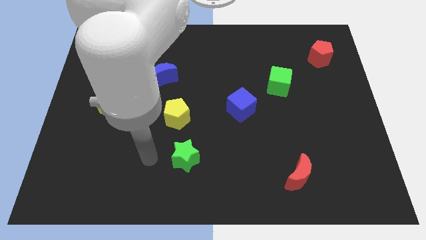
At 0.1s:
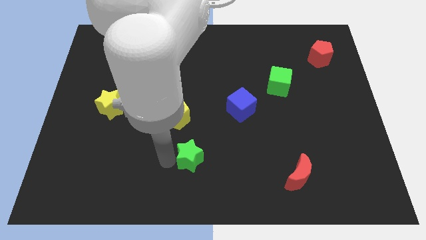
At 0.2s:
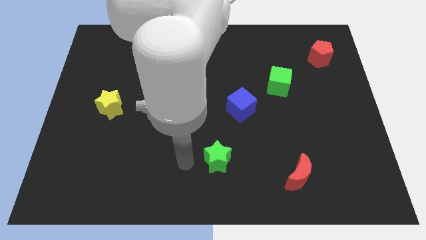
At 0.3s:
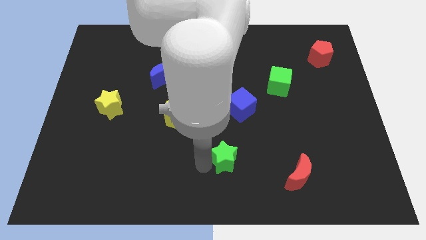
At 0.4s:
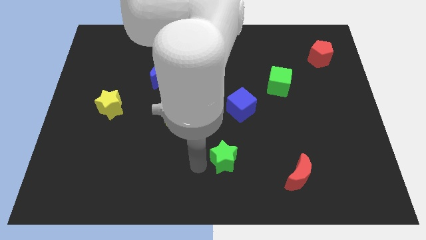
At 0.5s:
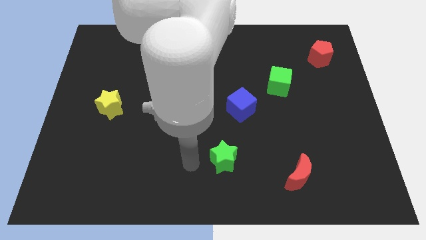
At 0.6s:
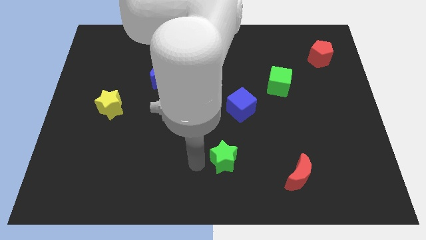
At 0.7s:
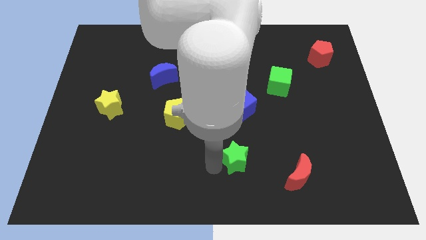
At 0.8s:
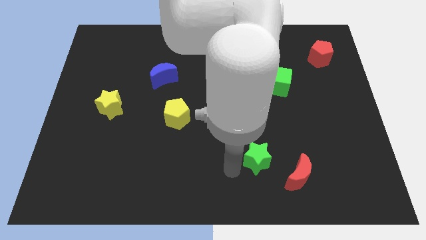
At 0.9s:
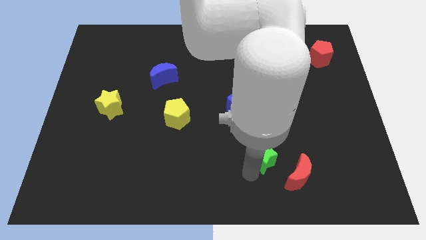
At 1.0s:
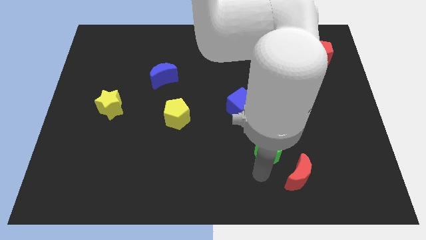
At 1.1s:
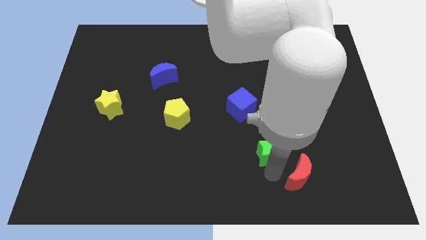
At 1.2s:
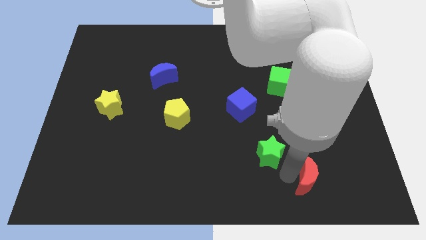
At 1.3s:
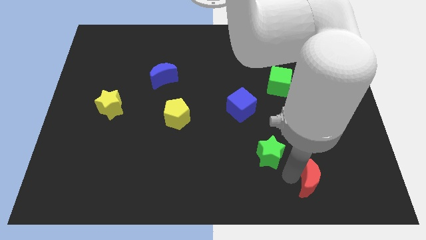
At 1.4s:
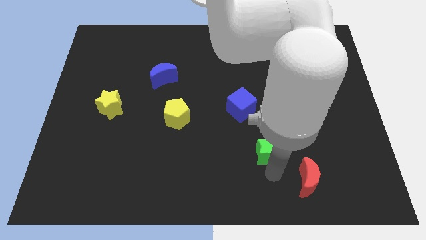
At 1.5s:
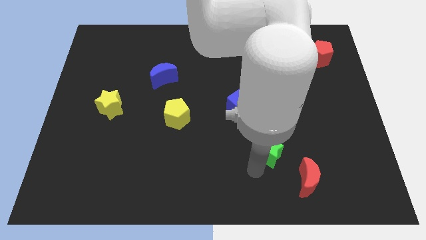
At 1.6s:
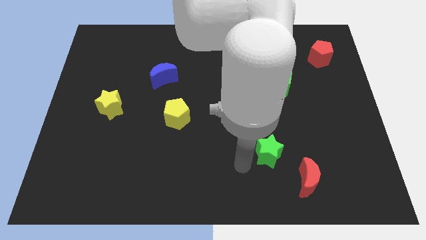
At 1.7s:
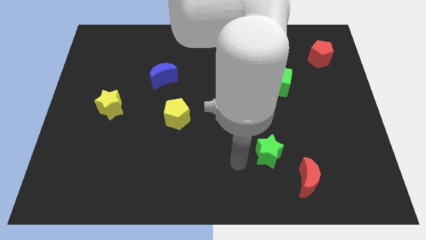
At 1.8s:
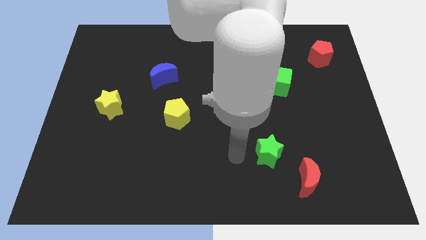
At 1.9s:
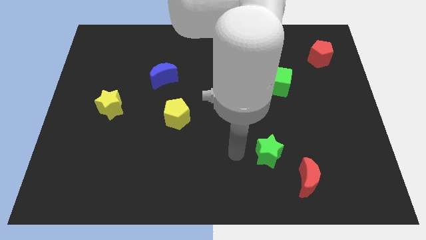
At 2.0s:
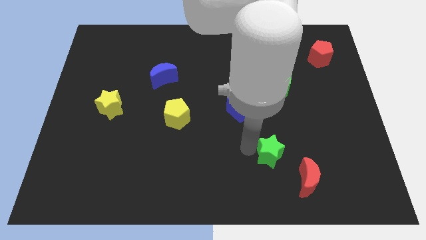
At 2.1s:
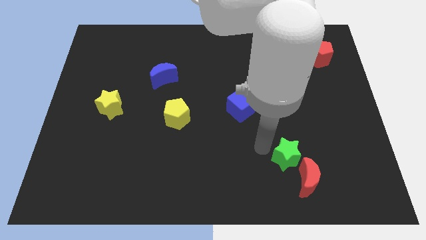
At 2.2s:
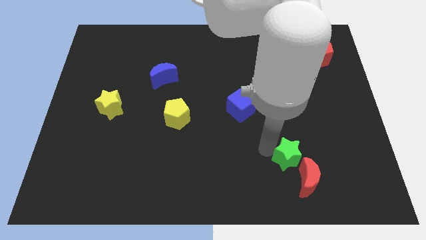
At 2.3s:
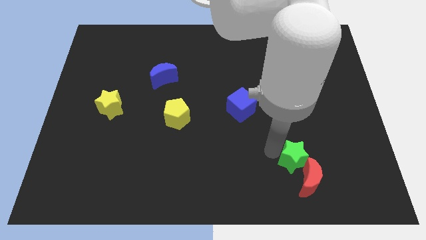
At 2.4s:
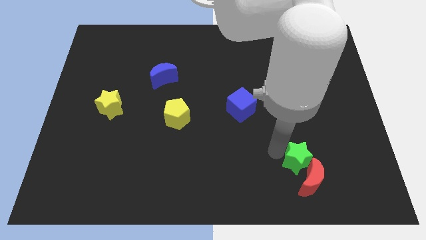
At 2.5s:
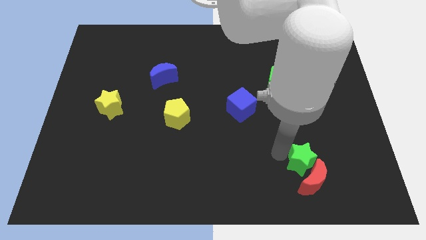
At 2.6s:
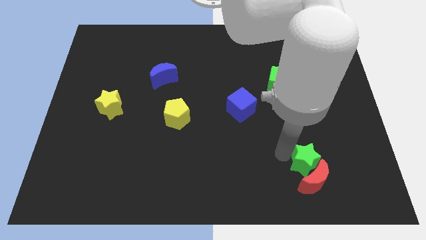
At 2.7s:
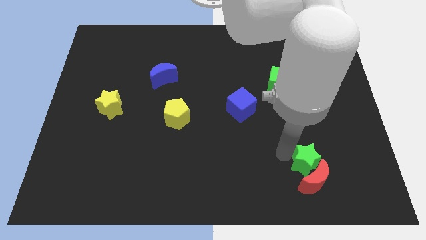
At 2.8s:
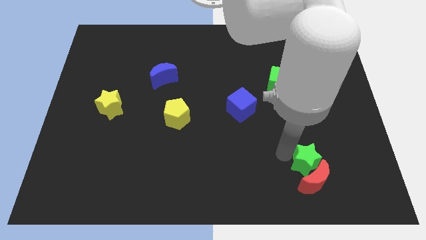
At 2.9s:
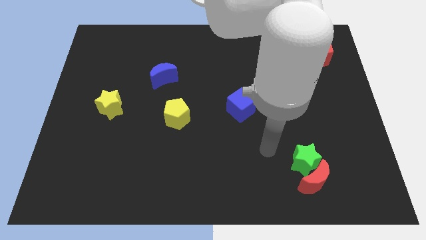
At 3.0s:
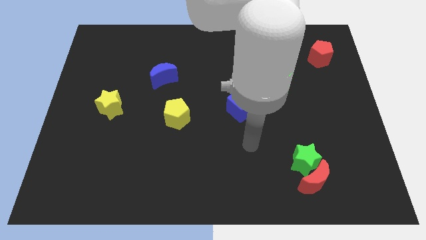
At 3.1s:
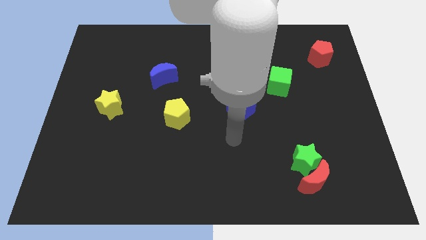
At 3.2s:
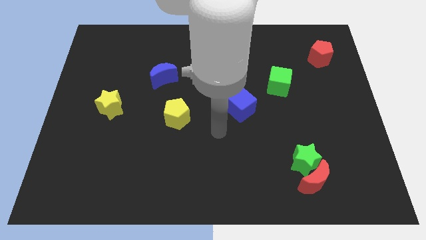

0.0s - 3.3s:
push the green star into the red moon

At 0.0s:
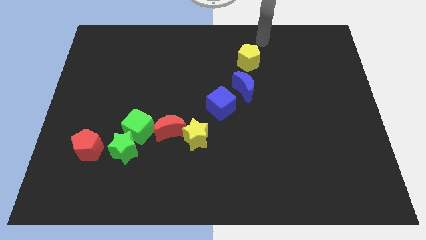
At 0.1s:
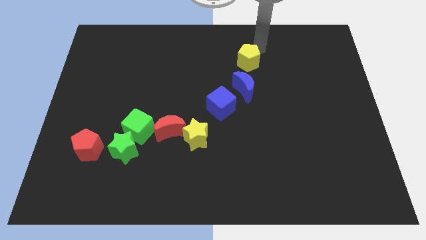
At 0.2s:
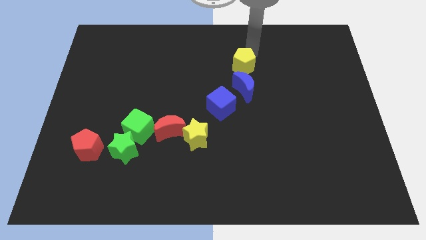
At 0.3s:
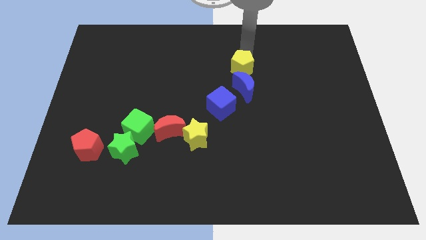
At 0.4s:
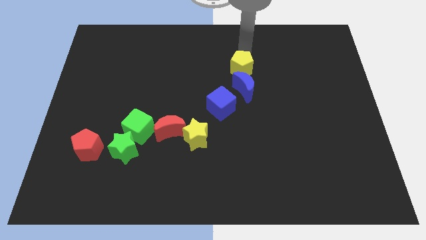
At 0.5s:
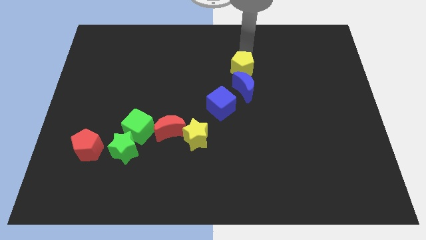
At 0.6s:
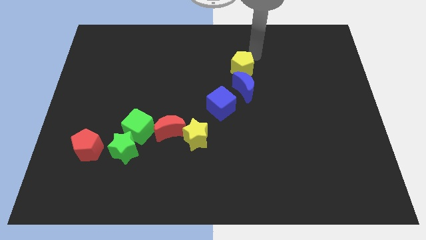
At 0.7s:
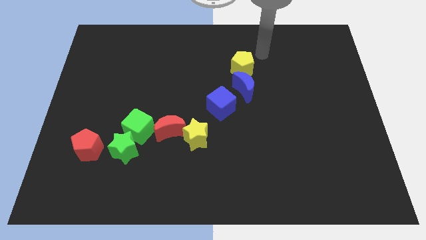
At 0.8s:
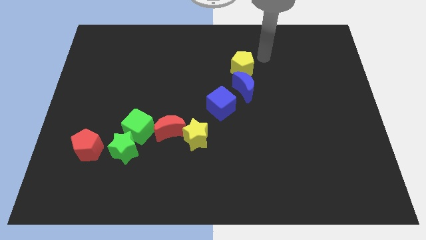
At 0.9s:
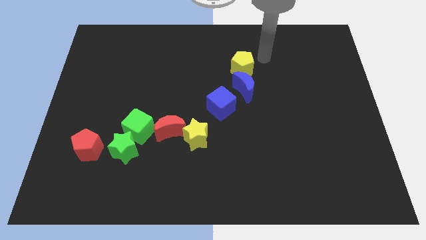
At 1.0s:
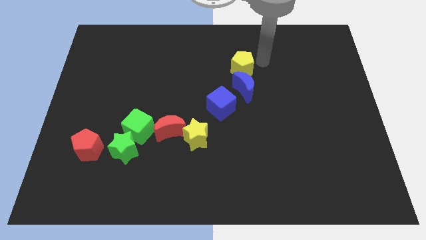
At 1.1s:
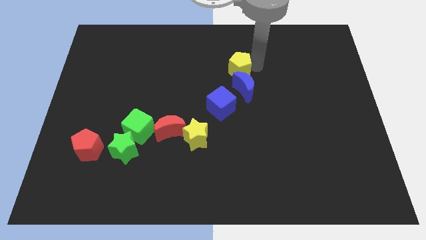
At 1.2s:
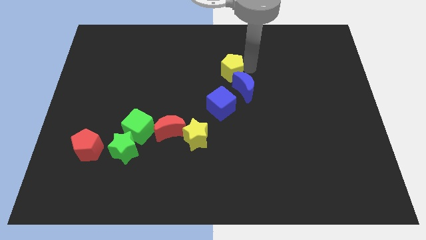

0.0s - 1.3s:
move the yellow pentagon above the blue crescent

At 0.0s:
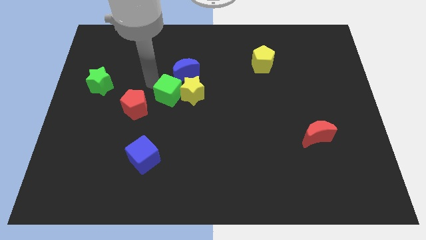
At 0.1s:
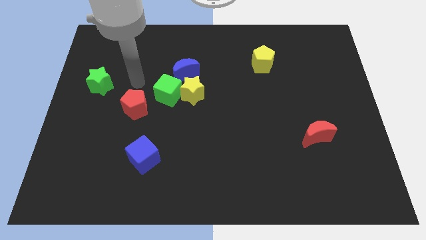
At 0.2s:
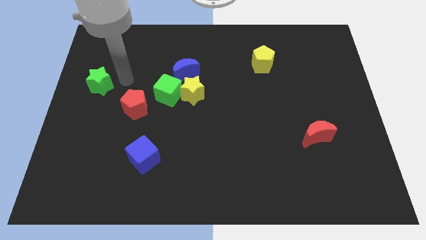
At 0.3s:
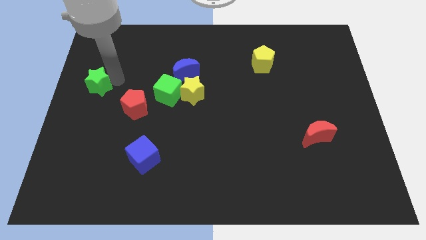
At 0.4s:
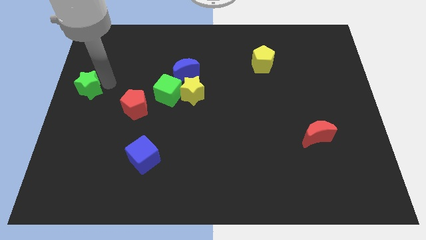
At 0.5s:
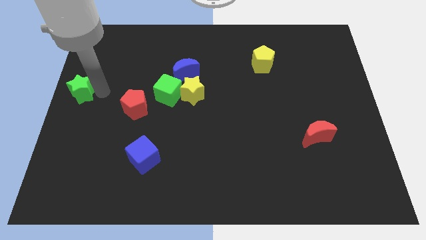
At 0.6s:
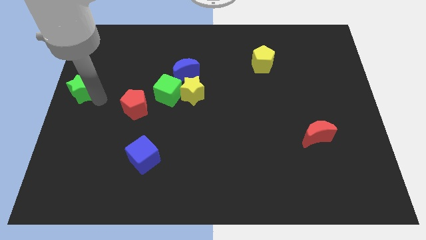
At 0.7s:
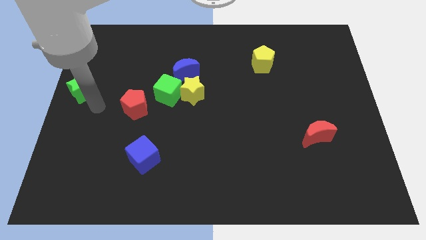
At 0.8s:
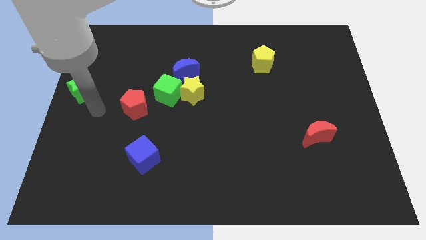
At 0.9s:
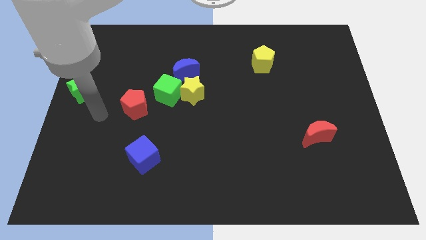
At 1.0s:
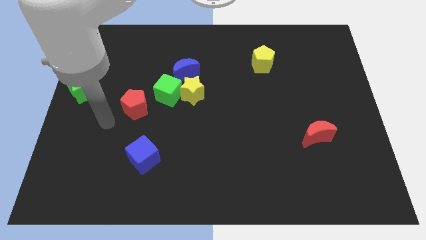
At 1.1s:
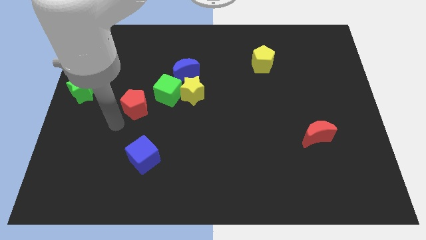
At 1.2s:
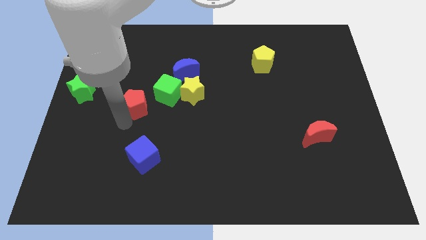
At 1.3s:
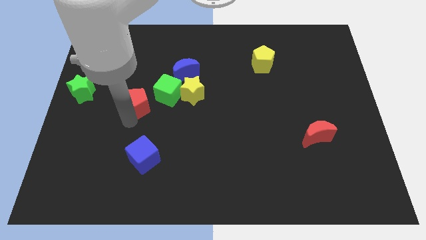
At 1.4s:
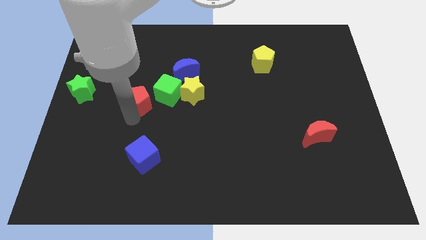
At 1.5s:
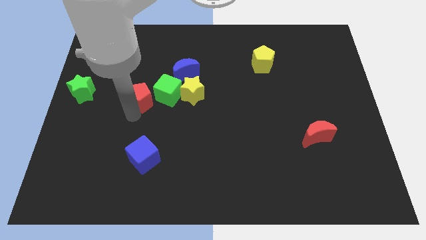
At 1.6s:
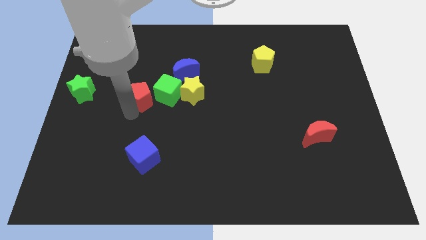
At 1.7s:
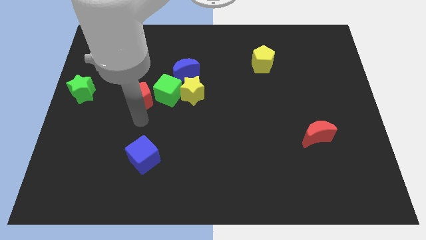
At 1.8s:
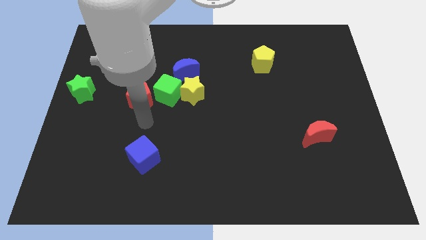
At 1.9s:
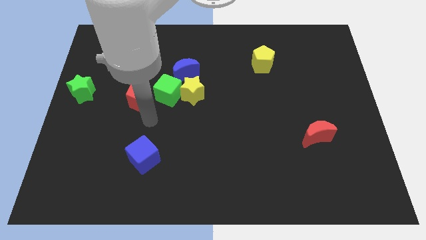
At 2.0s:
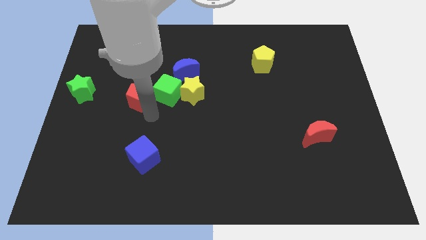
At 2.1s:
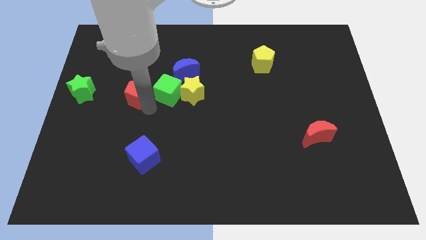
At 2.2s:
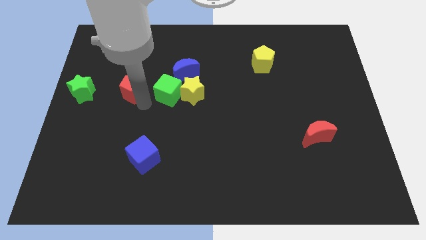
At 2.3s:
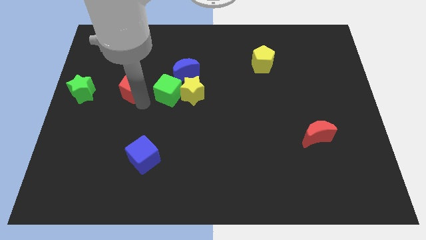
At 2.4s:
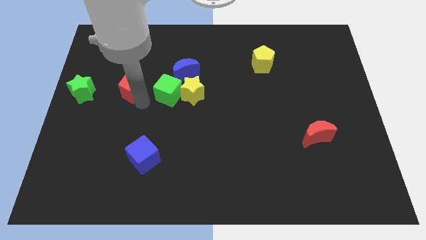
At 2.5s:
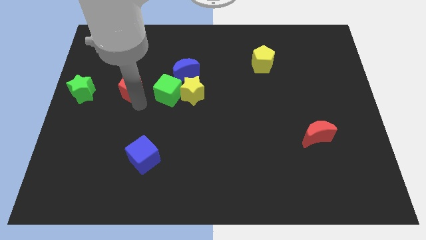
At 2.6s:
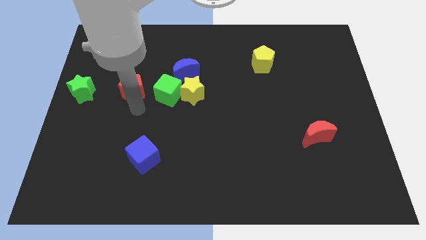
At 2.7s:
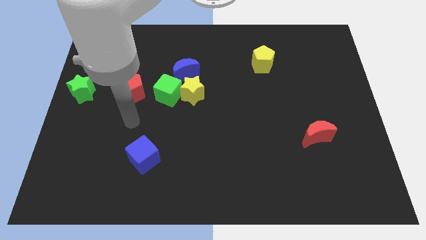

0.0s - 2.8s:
push the red pentagon to the left of the green cube

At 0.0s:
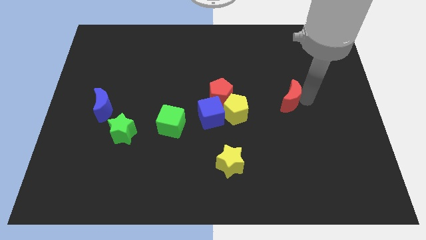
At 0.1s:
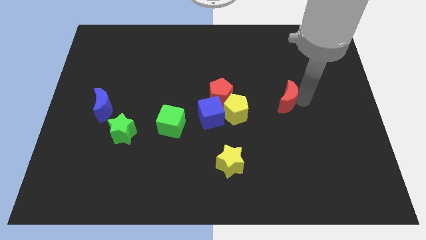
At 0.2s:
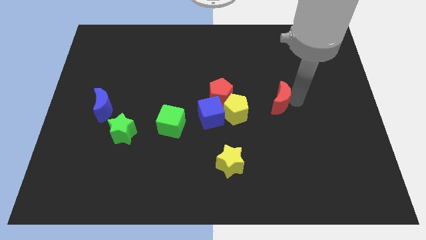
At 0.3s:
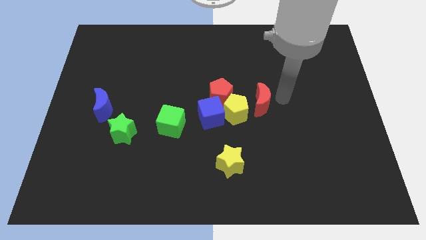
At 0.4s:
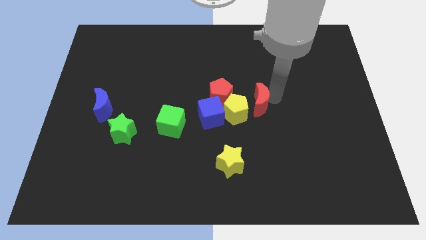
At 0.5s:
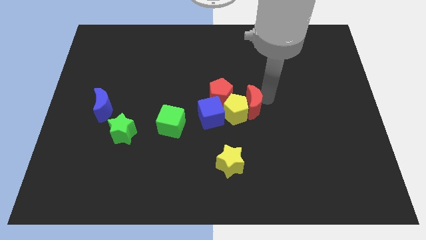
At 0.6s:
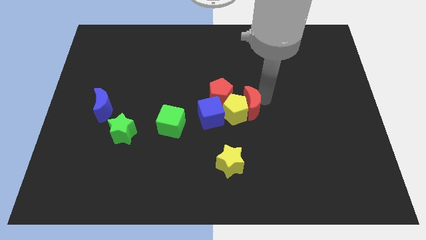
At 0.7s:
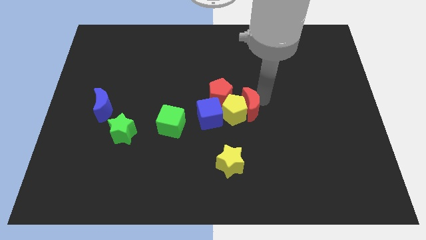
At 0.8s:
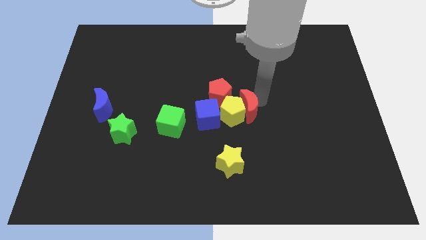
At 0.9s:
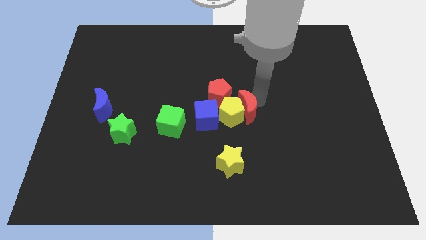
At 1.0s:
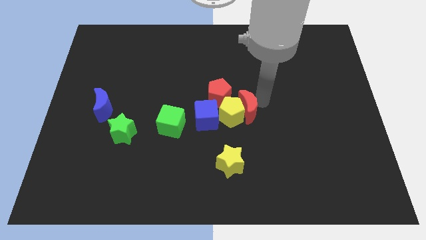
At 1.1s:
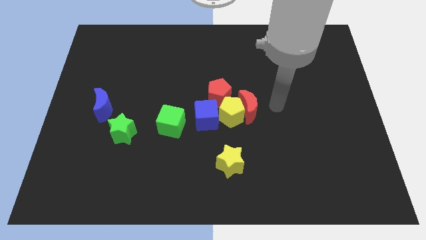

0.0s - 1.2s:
push the red crescent into the yellow pentagon

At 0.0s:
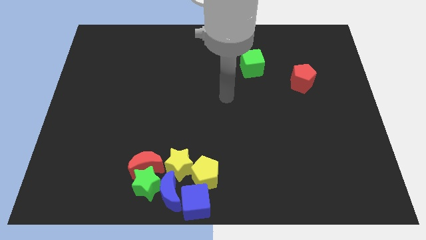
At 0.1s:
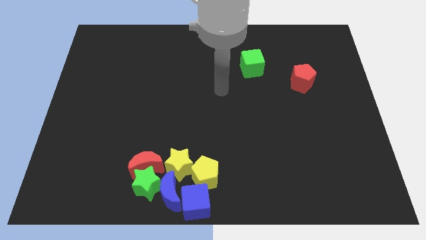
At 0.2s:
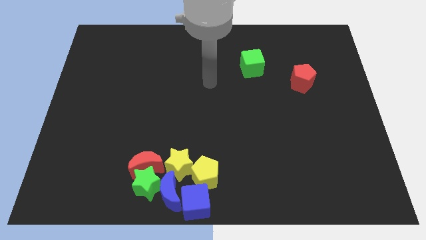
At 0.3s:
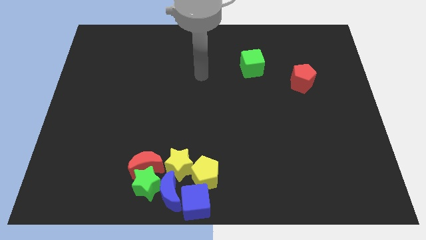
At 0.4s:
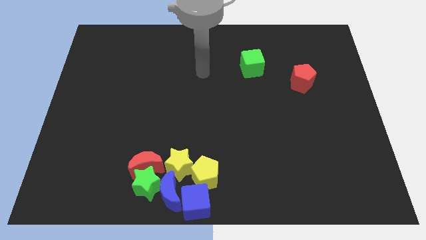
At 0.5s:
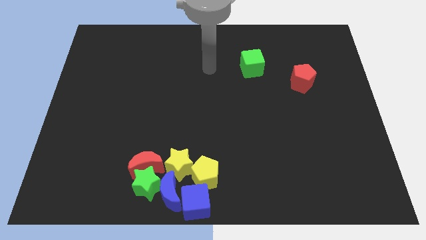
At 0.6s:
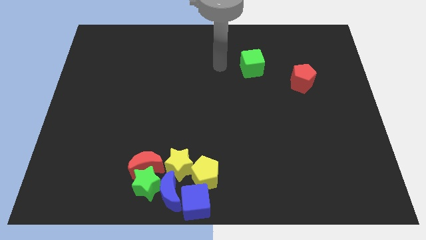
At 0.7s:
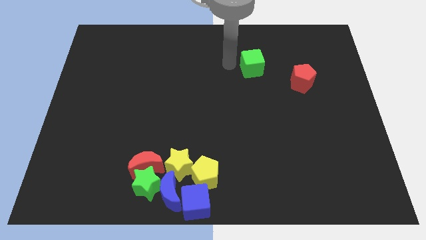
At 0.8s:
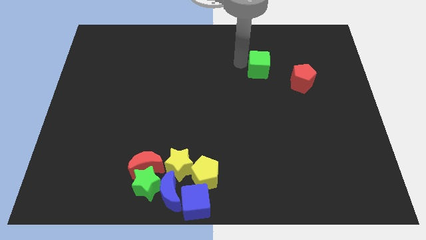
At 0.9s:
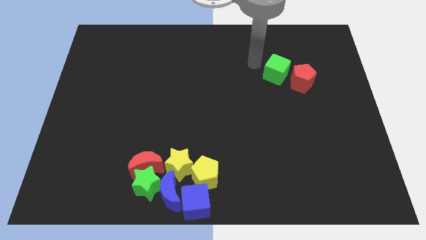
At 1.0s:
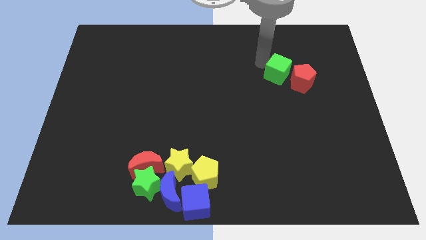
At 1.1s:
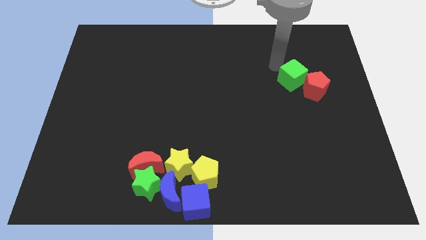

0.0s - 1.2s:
push the green cube towards the red crescent at the right of the board
